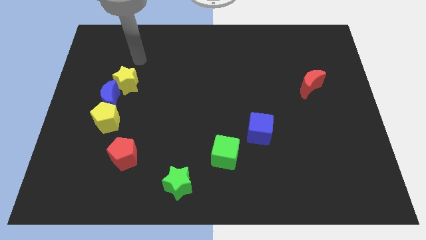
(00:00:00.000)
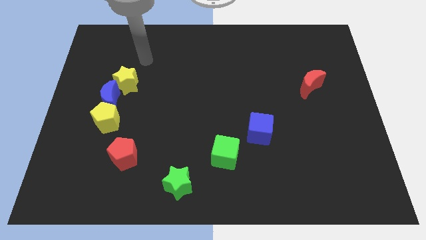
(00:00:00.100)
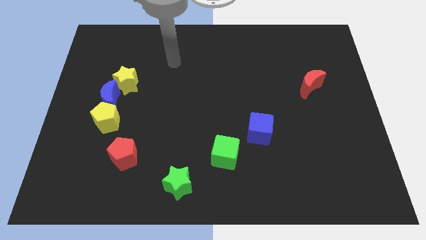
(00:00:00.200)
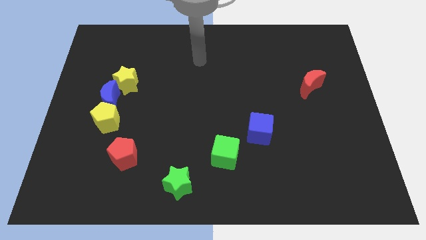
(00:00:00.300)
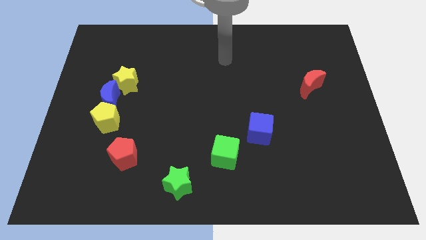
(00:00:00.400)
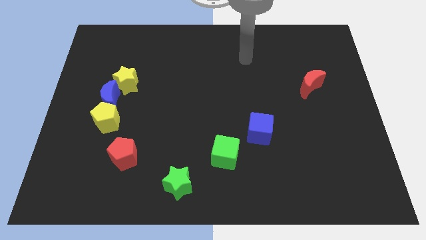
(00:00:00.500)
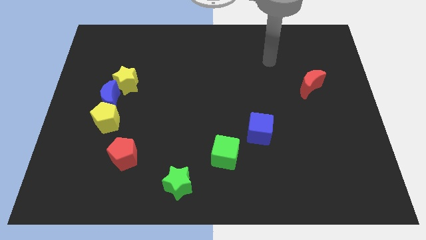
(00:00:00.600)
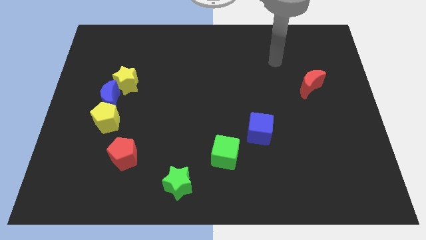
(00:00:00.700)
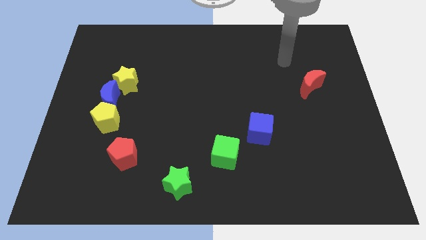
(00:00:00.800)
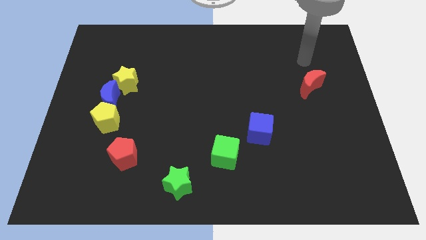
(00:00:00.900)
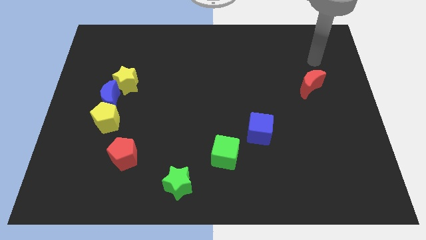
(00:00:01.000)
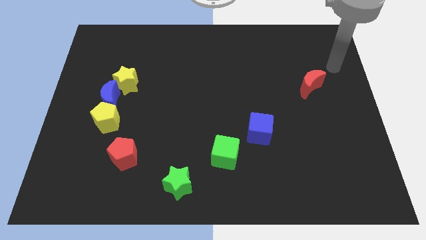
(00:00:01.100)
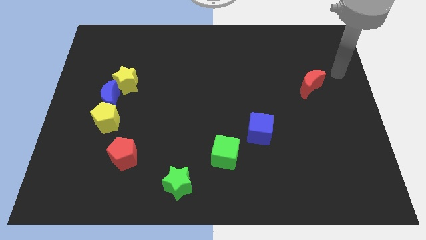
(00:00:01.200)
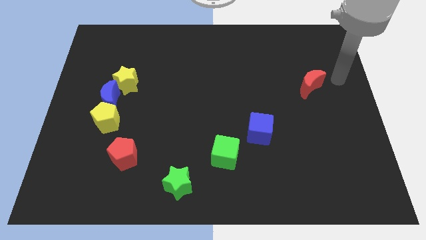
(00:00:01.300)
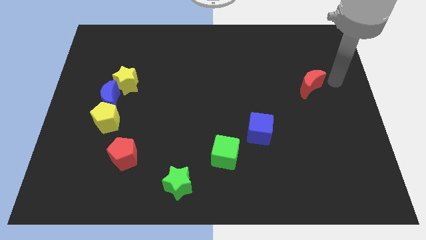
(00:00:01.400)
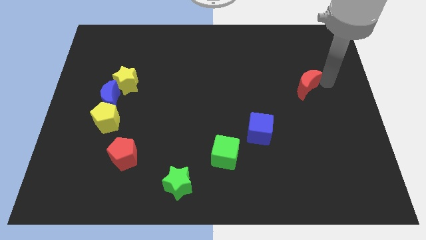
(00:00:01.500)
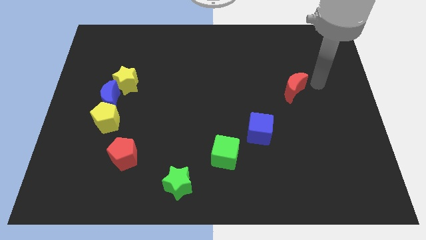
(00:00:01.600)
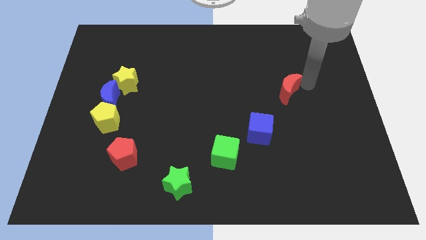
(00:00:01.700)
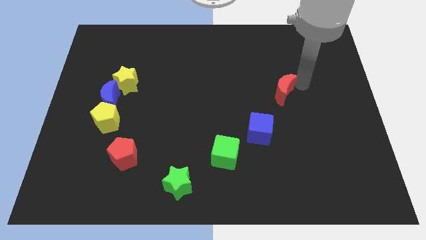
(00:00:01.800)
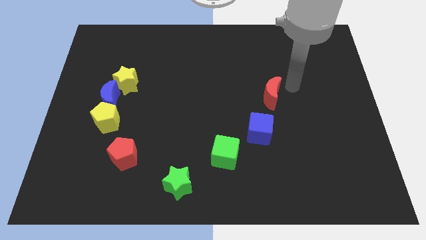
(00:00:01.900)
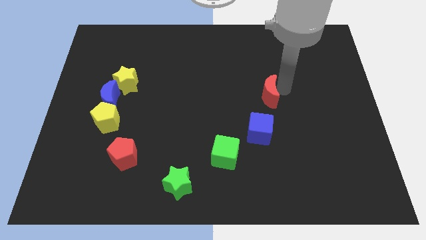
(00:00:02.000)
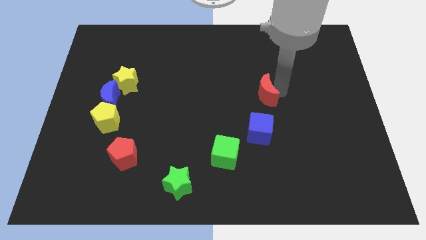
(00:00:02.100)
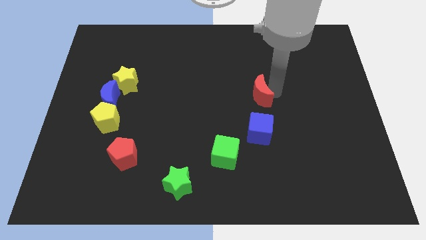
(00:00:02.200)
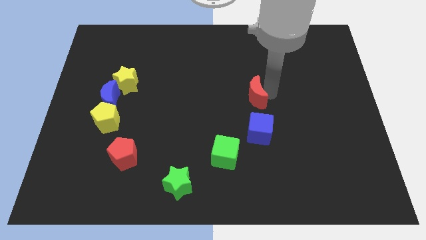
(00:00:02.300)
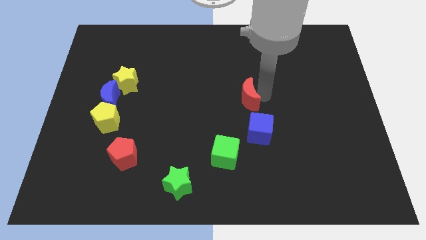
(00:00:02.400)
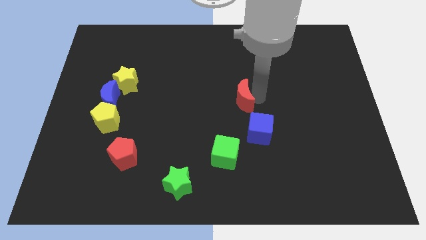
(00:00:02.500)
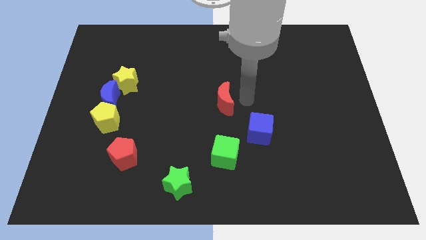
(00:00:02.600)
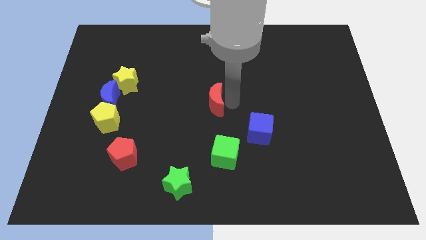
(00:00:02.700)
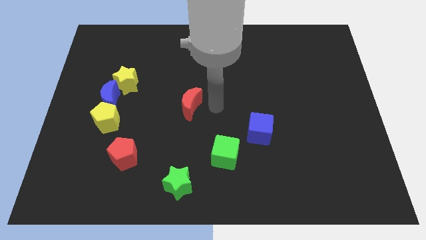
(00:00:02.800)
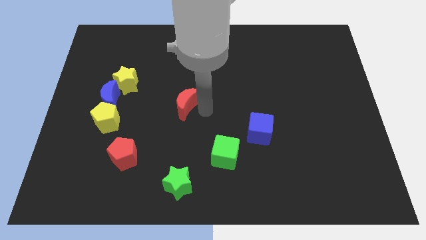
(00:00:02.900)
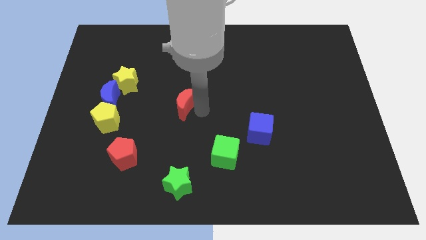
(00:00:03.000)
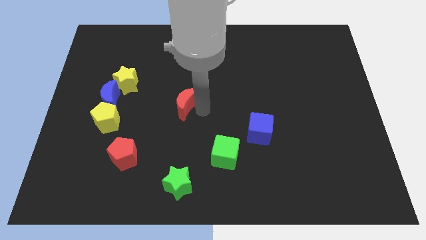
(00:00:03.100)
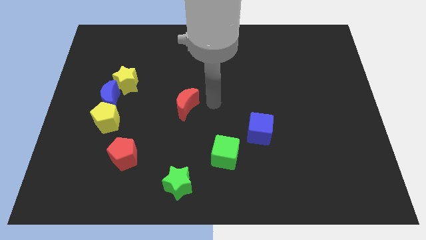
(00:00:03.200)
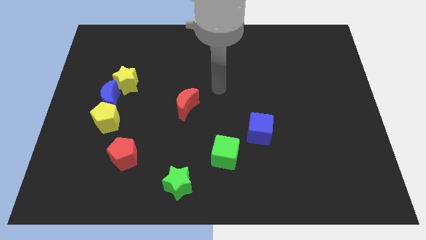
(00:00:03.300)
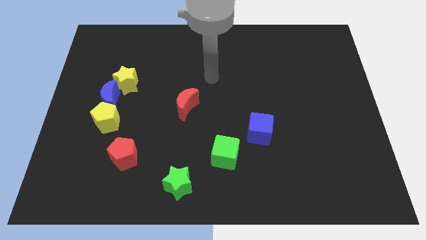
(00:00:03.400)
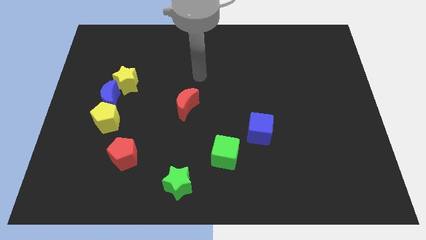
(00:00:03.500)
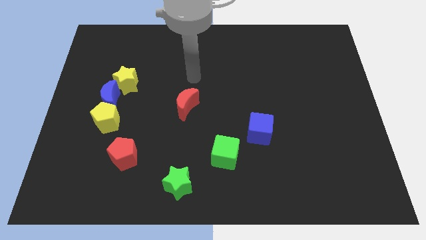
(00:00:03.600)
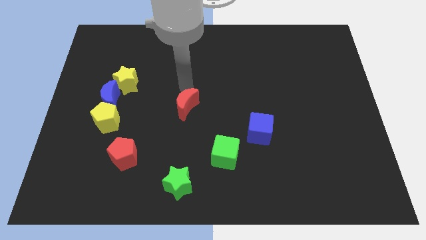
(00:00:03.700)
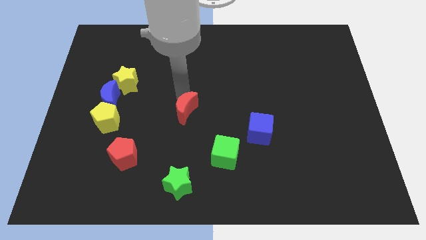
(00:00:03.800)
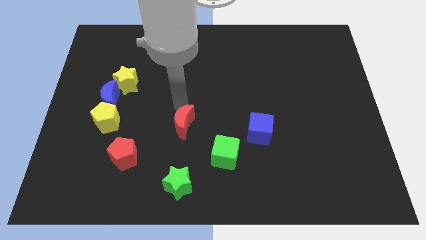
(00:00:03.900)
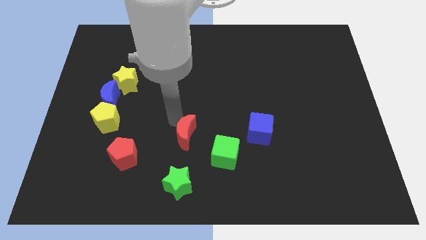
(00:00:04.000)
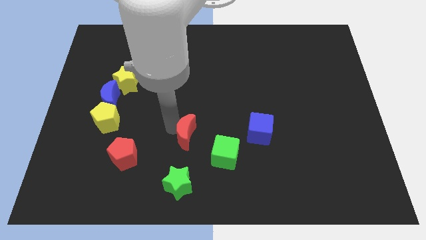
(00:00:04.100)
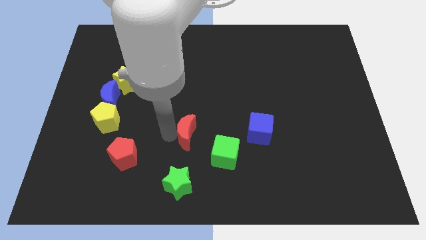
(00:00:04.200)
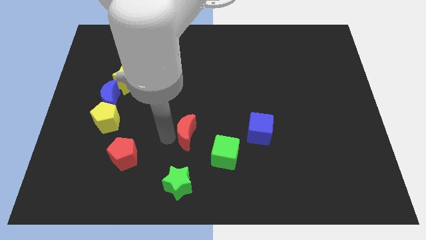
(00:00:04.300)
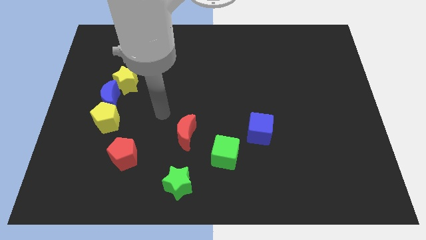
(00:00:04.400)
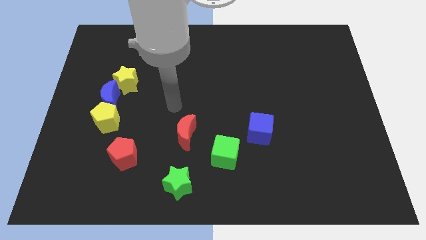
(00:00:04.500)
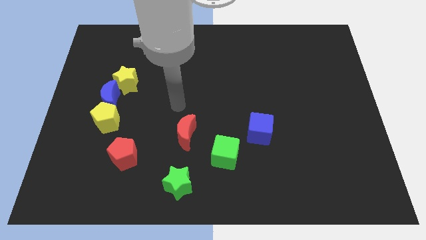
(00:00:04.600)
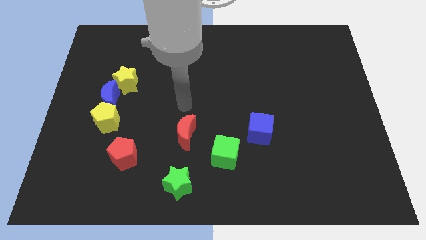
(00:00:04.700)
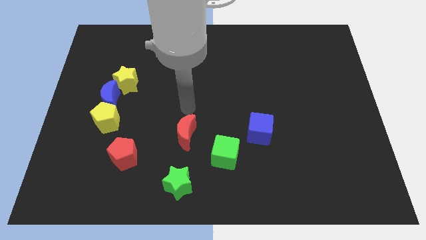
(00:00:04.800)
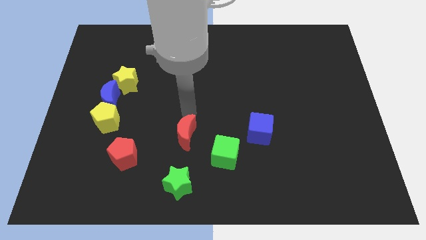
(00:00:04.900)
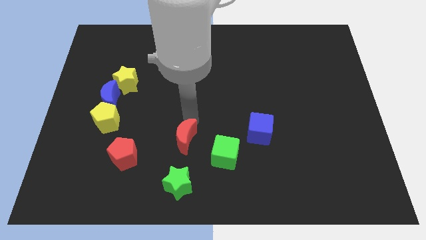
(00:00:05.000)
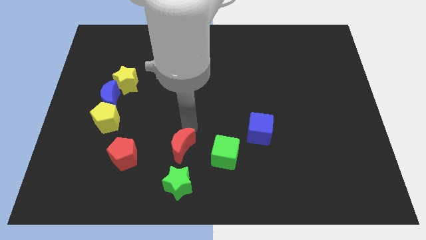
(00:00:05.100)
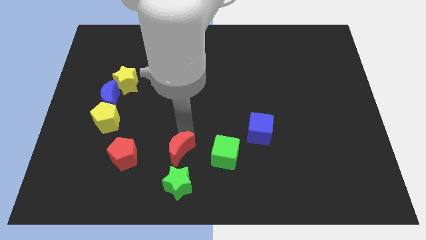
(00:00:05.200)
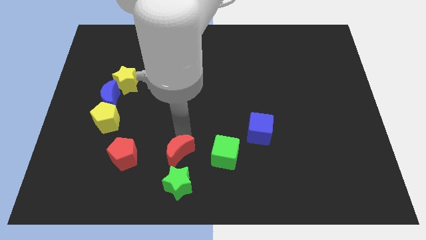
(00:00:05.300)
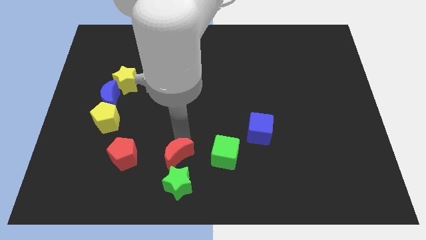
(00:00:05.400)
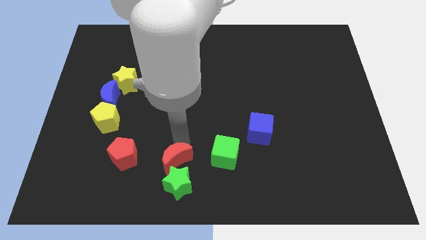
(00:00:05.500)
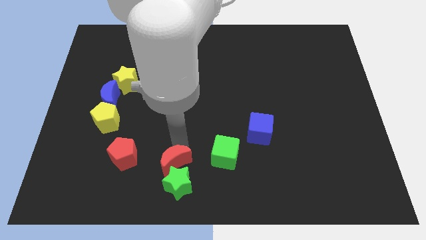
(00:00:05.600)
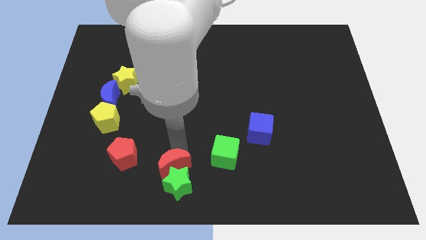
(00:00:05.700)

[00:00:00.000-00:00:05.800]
move the red moon to the green star

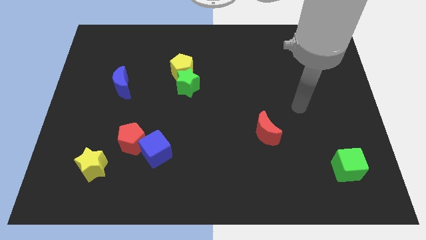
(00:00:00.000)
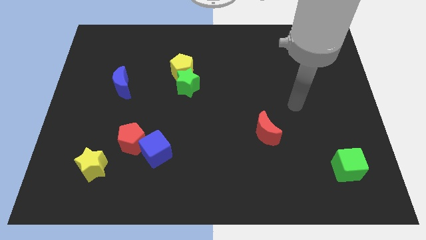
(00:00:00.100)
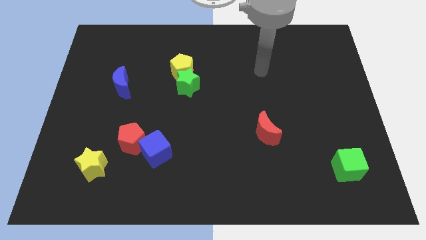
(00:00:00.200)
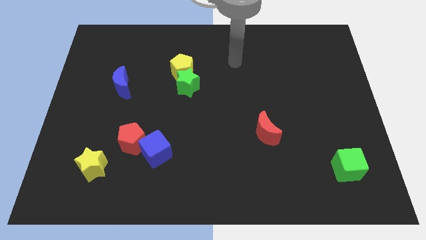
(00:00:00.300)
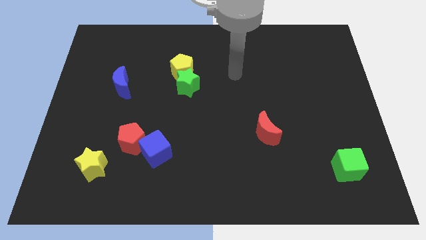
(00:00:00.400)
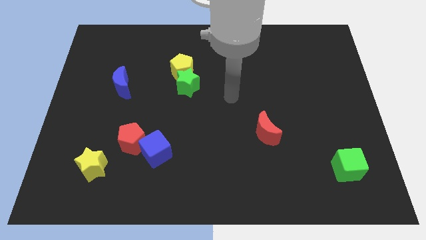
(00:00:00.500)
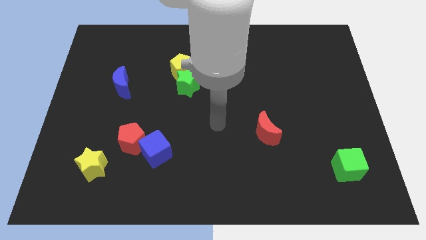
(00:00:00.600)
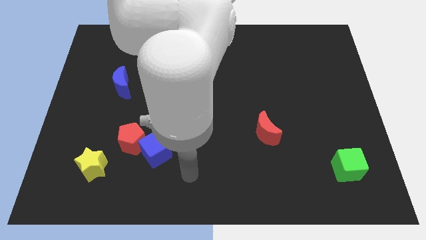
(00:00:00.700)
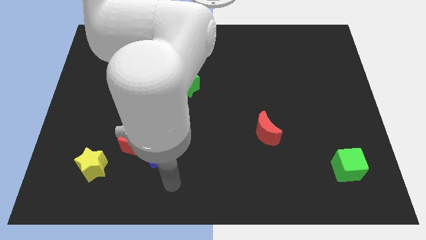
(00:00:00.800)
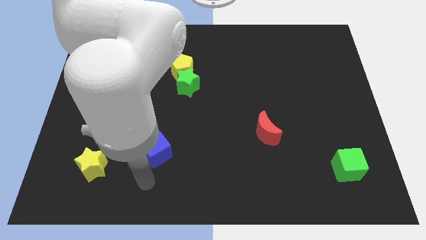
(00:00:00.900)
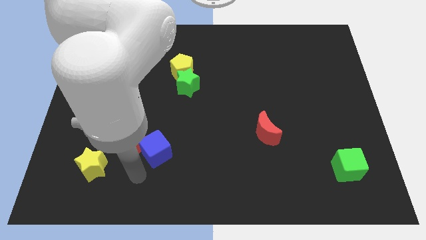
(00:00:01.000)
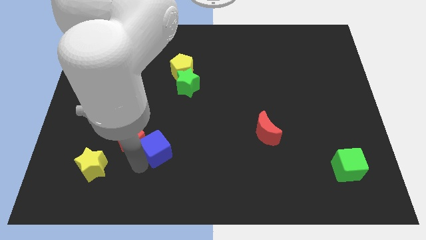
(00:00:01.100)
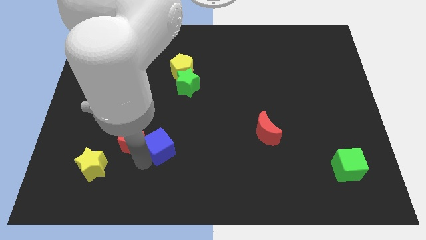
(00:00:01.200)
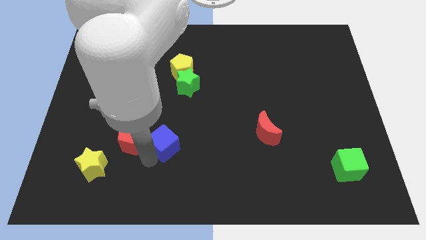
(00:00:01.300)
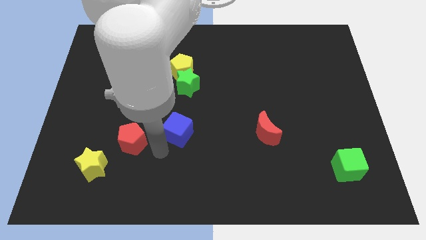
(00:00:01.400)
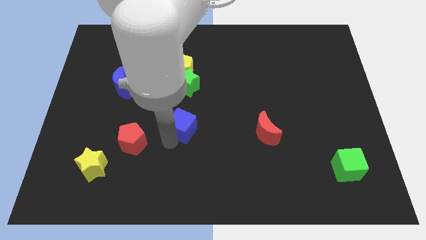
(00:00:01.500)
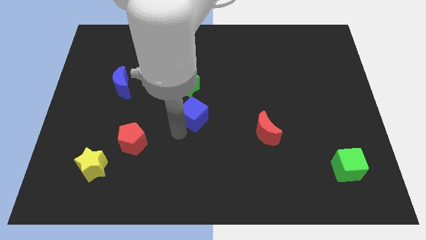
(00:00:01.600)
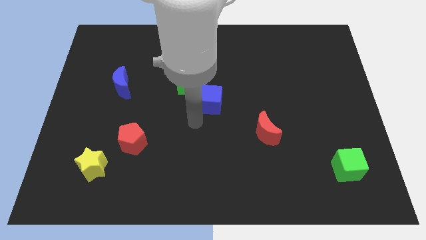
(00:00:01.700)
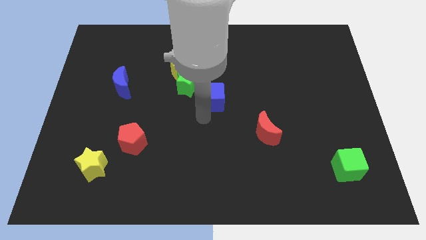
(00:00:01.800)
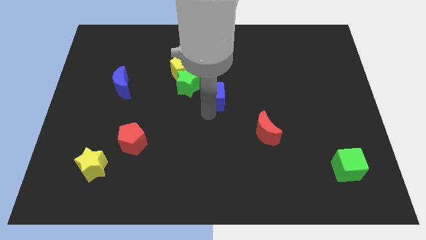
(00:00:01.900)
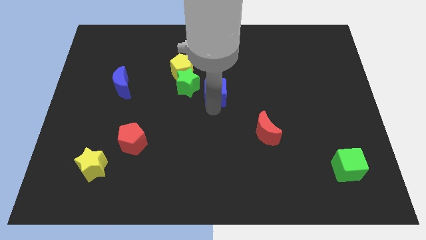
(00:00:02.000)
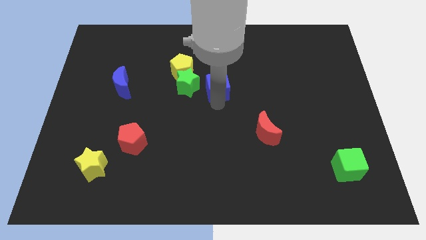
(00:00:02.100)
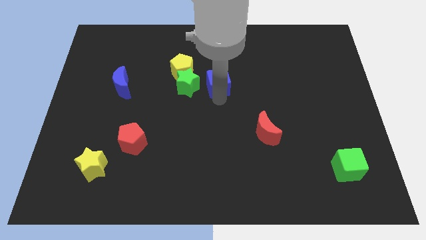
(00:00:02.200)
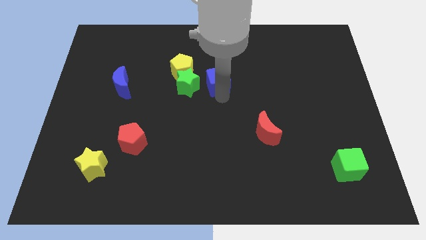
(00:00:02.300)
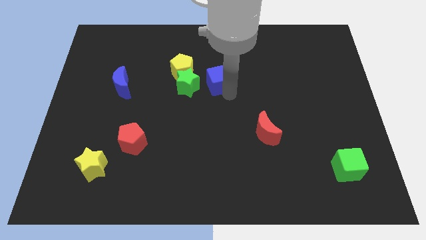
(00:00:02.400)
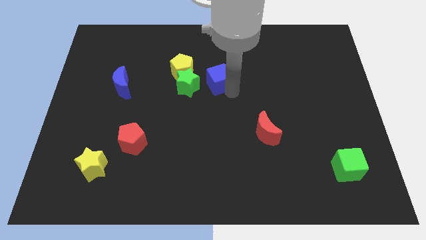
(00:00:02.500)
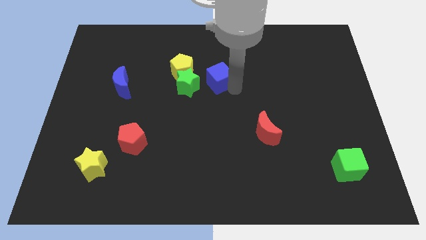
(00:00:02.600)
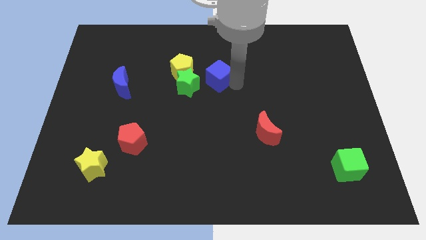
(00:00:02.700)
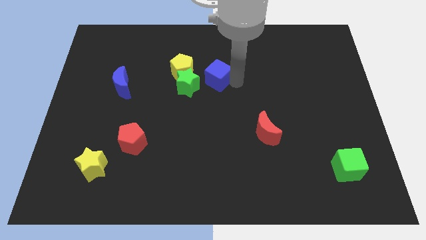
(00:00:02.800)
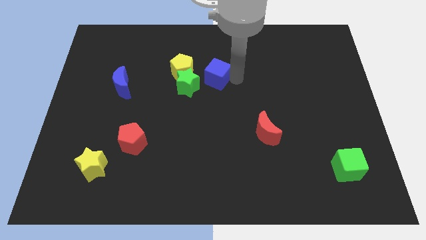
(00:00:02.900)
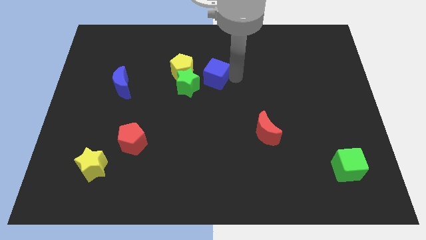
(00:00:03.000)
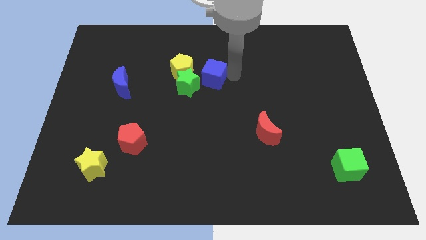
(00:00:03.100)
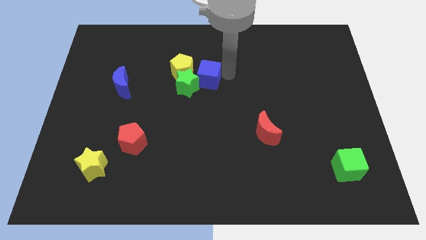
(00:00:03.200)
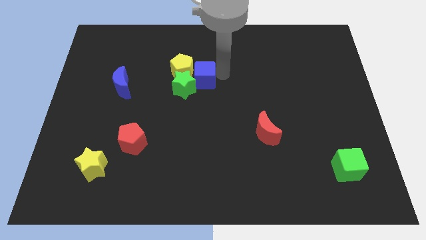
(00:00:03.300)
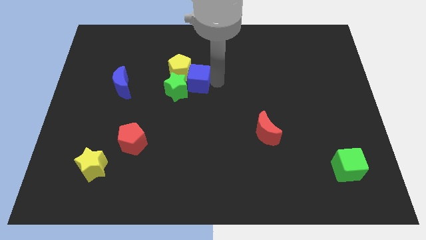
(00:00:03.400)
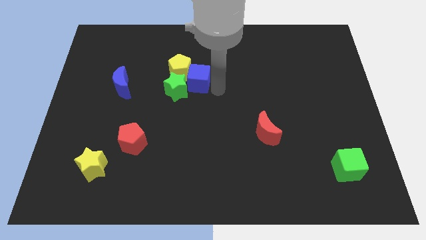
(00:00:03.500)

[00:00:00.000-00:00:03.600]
move the blue cube towards the yellow pentagon
